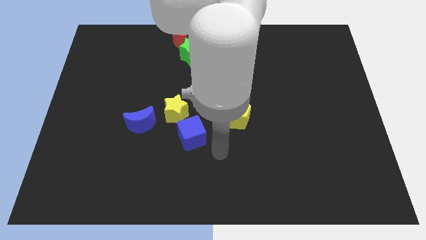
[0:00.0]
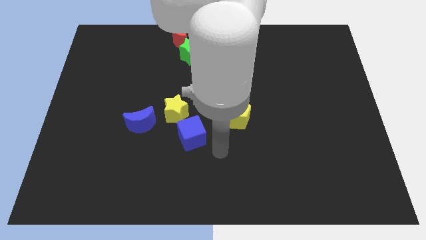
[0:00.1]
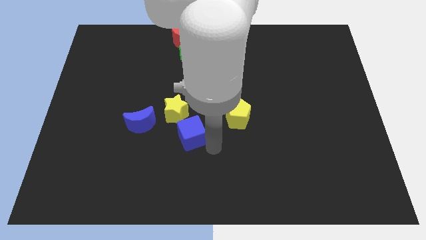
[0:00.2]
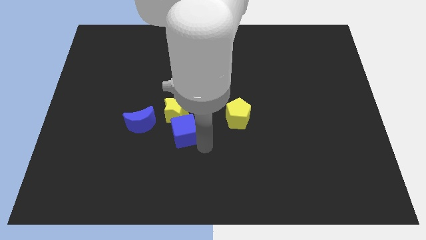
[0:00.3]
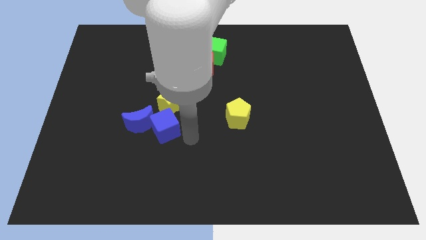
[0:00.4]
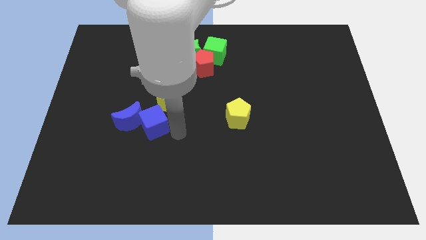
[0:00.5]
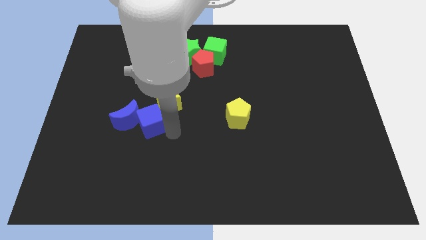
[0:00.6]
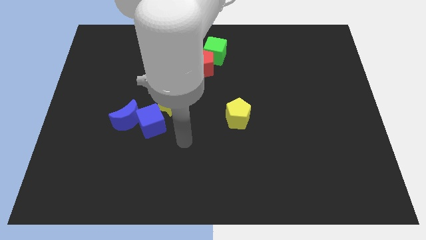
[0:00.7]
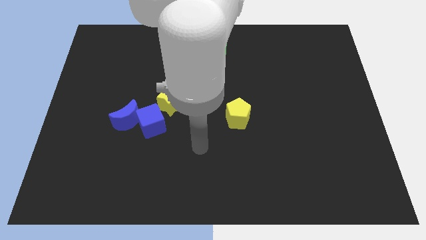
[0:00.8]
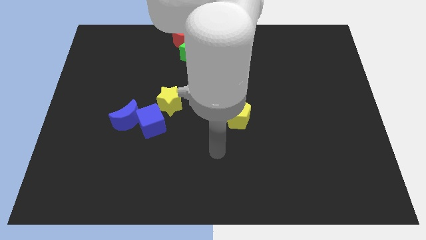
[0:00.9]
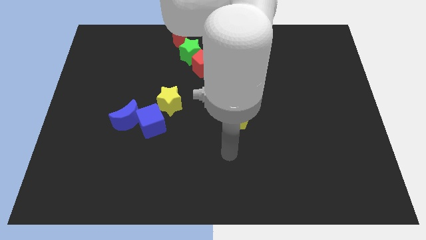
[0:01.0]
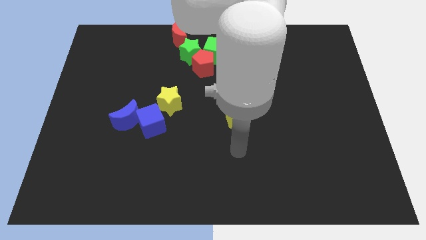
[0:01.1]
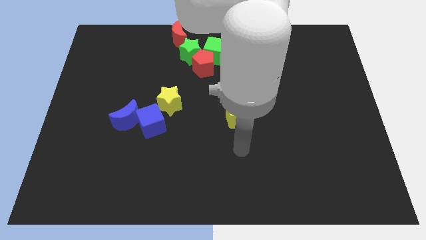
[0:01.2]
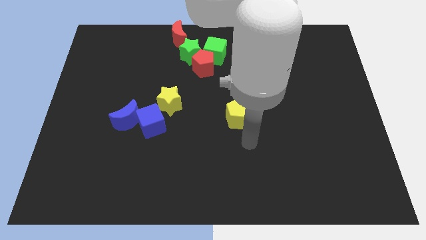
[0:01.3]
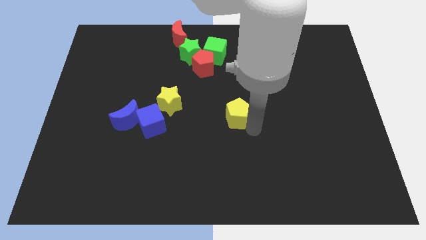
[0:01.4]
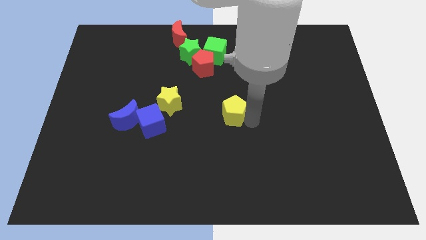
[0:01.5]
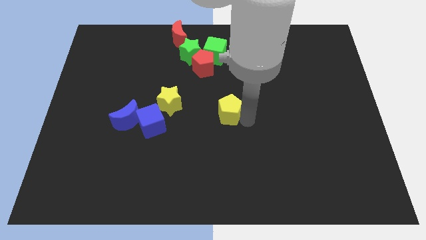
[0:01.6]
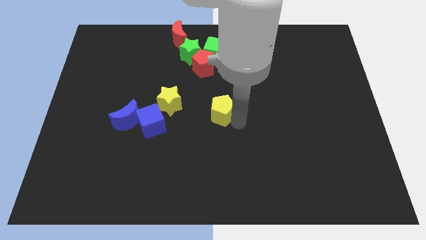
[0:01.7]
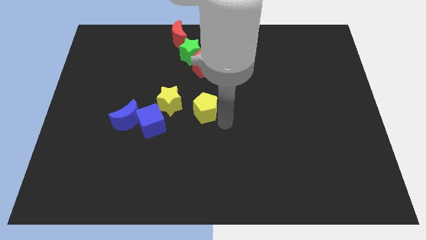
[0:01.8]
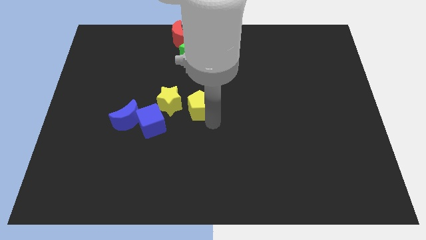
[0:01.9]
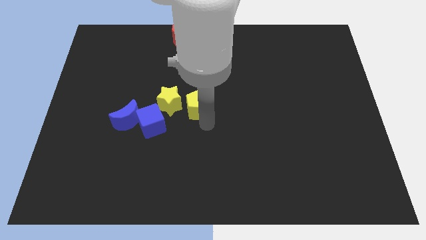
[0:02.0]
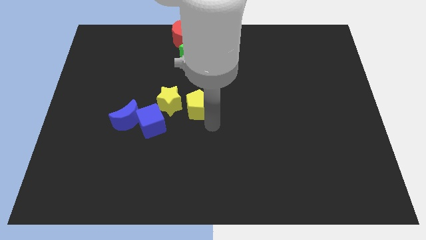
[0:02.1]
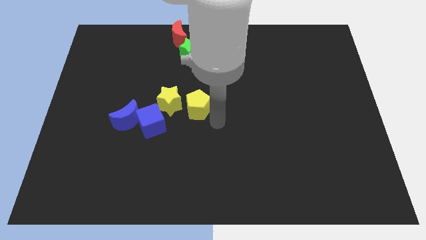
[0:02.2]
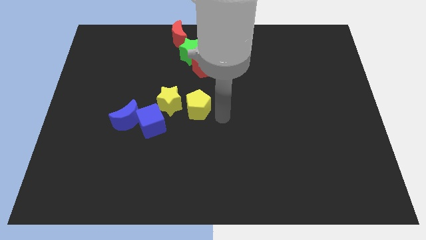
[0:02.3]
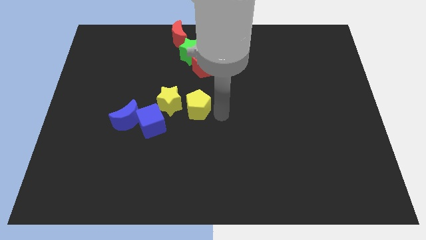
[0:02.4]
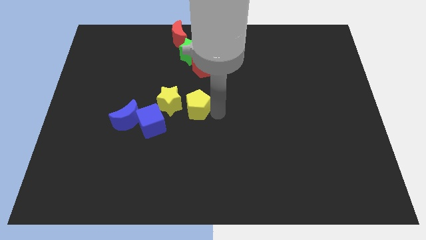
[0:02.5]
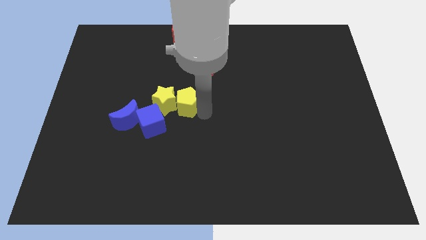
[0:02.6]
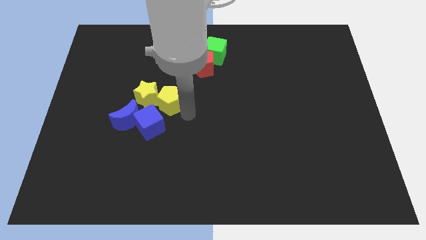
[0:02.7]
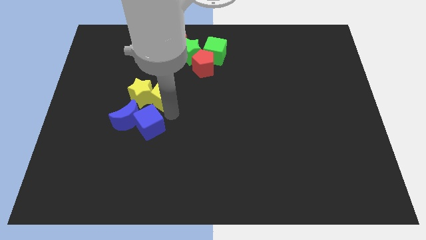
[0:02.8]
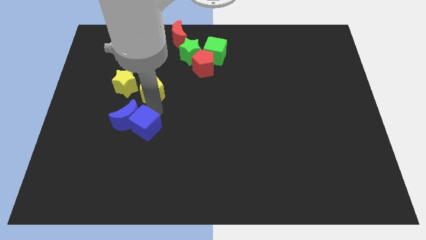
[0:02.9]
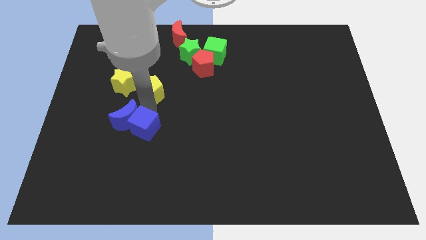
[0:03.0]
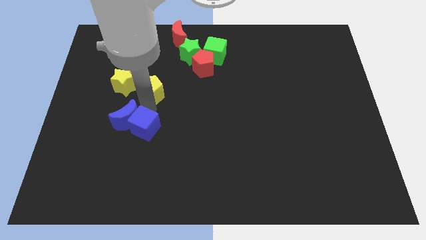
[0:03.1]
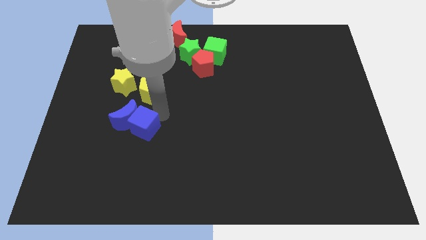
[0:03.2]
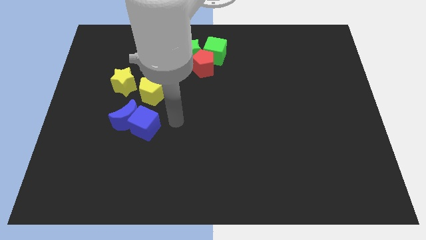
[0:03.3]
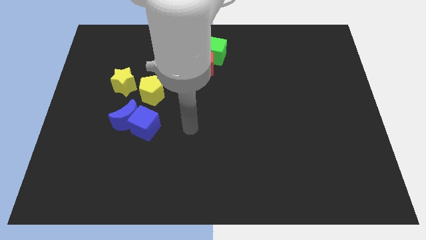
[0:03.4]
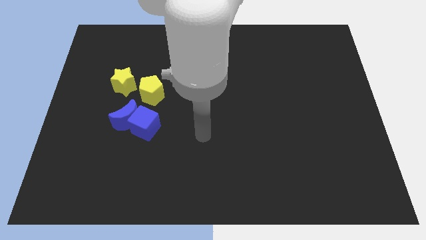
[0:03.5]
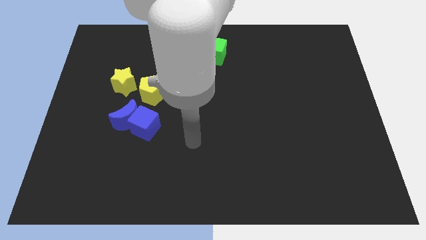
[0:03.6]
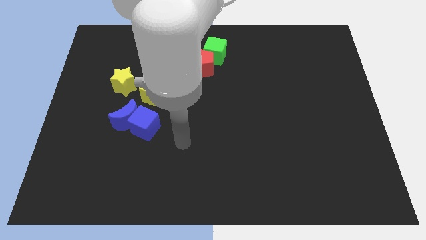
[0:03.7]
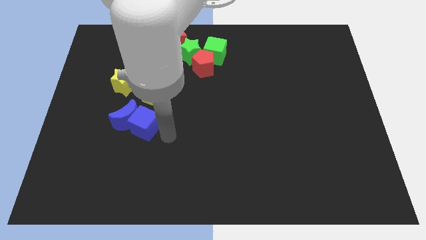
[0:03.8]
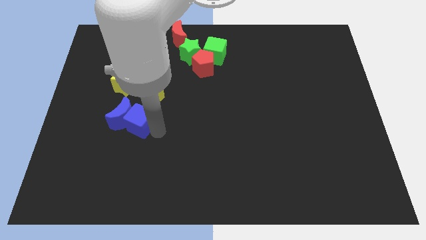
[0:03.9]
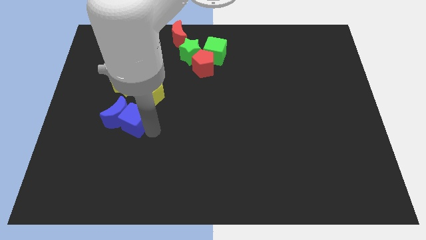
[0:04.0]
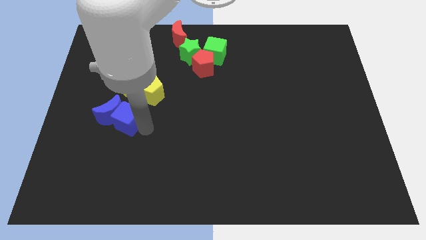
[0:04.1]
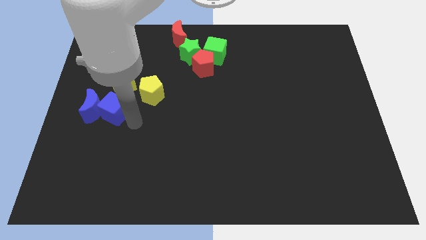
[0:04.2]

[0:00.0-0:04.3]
place the yellow and blue blocks at the left center of the board

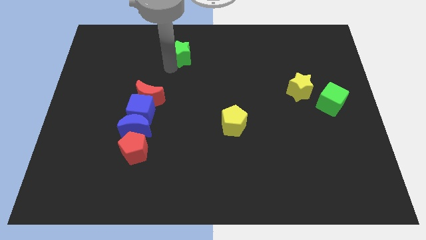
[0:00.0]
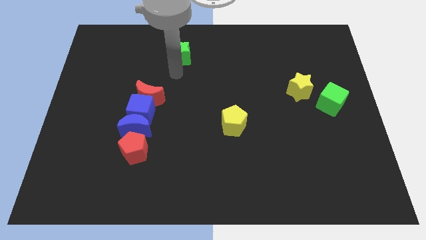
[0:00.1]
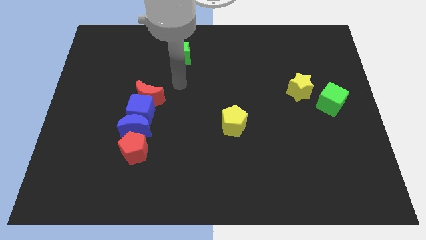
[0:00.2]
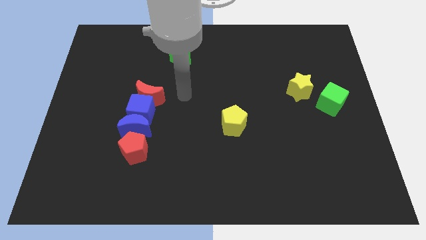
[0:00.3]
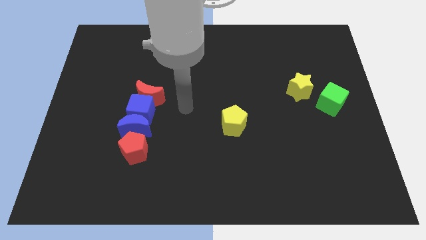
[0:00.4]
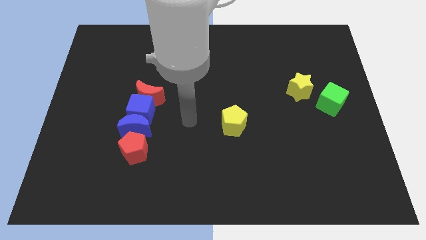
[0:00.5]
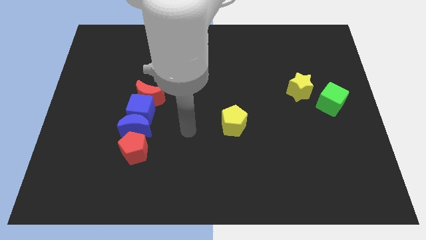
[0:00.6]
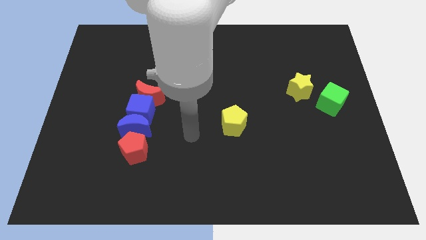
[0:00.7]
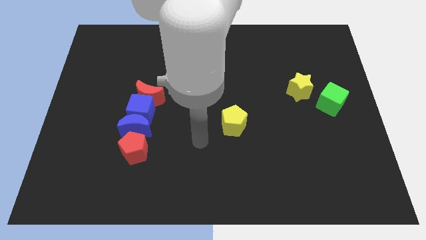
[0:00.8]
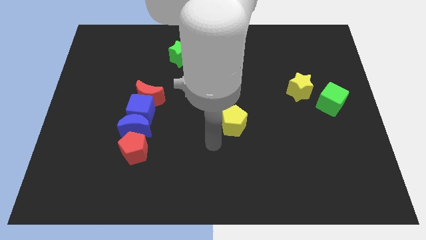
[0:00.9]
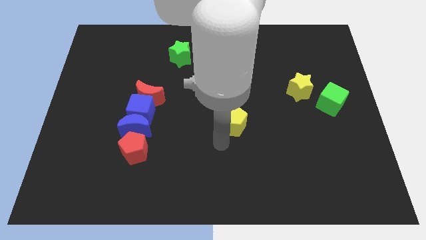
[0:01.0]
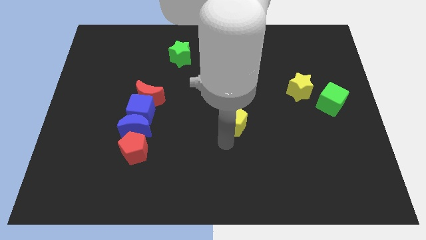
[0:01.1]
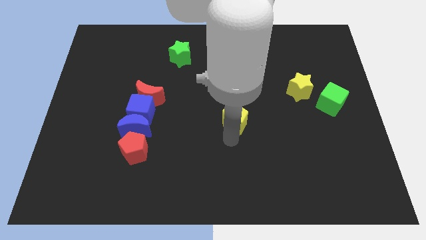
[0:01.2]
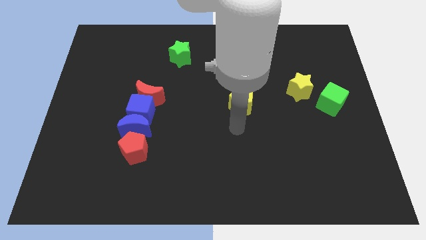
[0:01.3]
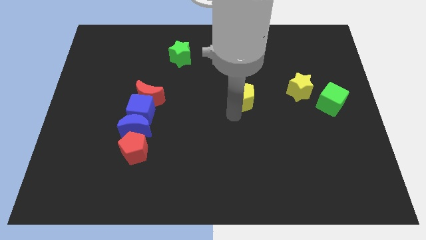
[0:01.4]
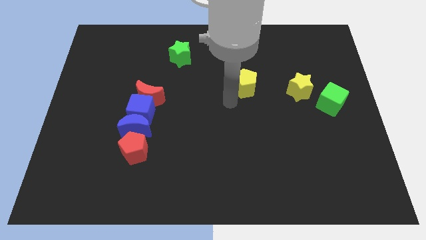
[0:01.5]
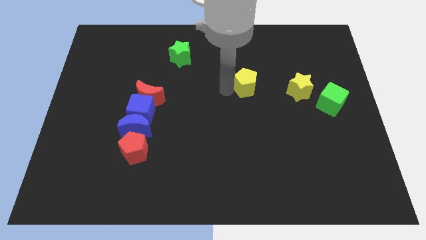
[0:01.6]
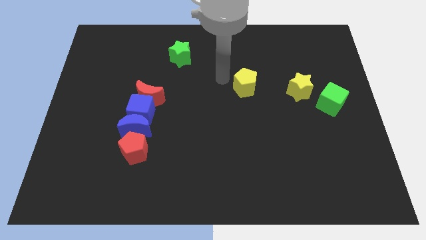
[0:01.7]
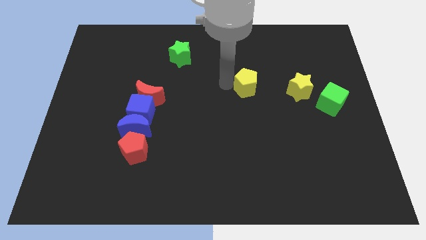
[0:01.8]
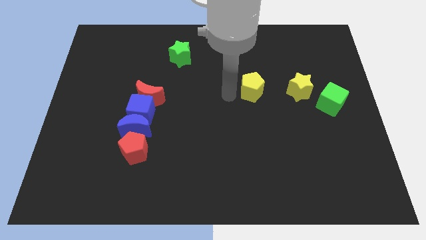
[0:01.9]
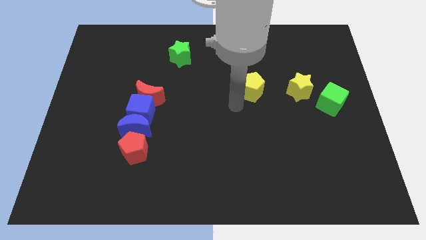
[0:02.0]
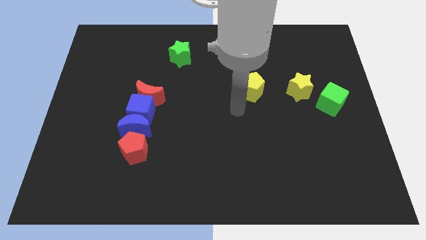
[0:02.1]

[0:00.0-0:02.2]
move the yellow pentagon left to the yellow star

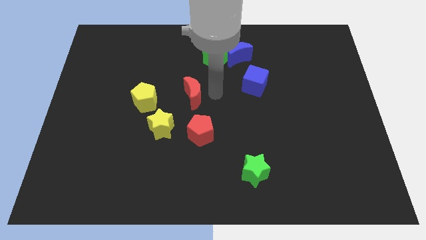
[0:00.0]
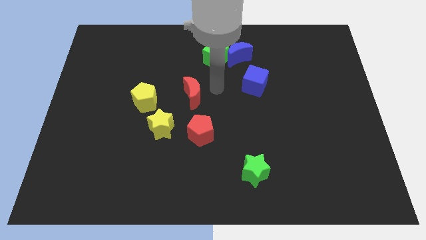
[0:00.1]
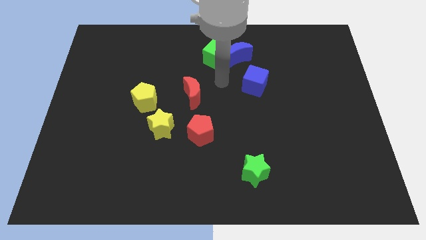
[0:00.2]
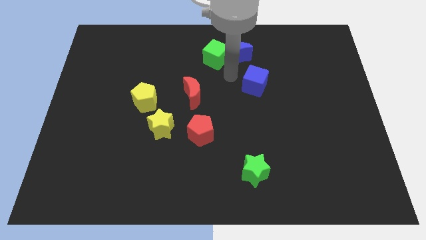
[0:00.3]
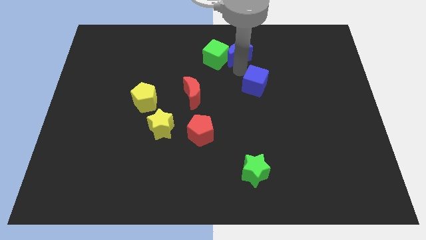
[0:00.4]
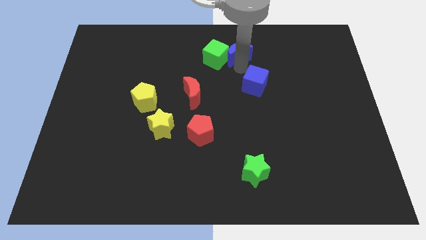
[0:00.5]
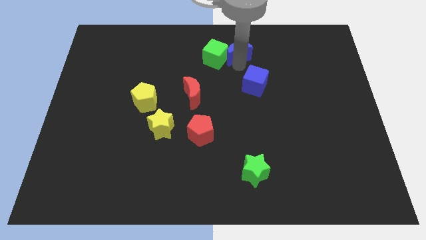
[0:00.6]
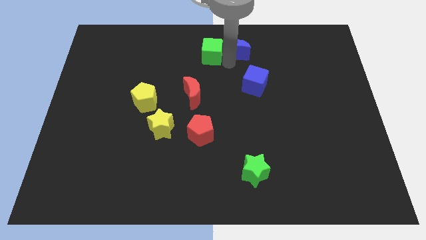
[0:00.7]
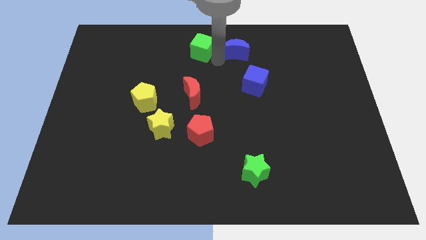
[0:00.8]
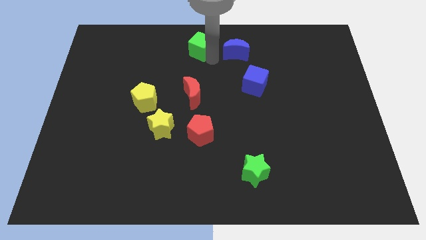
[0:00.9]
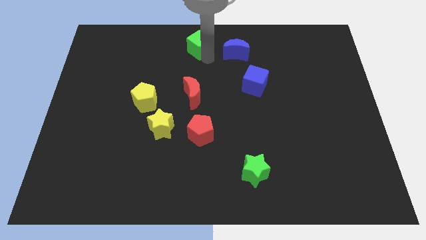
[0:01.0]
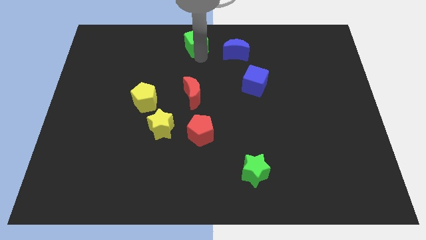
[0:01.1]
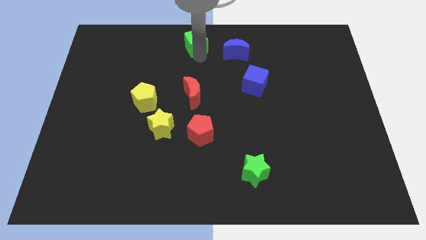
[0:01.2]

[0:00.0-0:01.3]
separate the blue moon and green cube

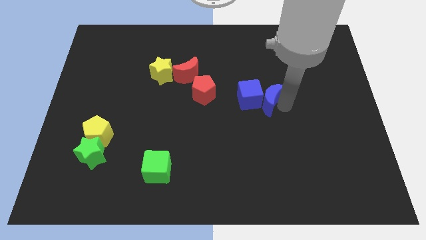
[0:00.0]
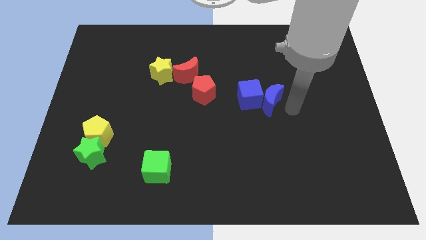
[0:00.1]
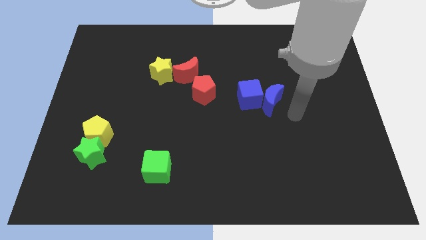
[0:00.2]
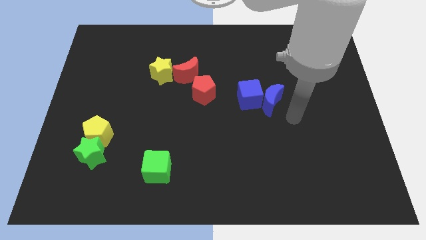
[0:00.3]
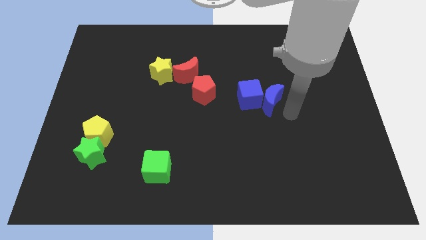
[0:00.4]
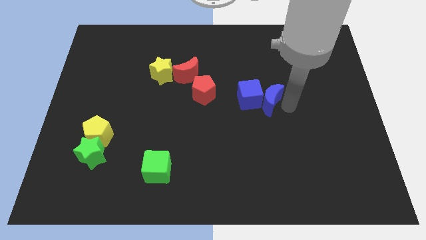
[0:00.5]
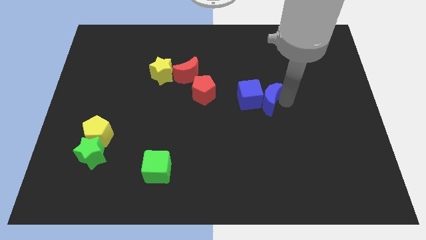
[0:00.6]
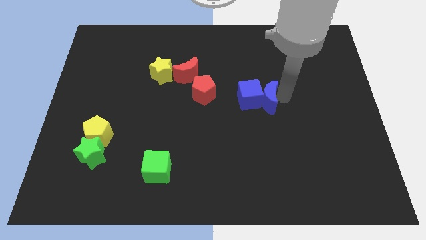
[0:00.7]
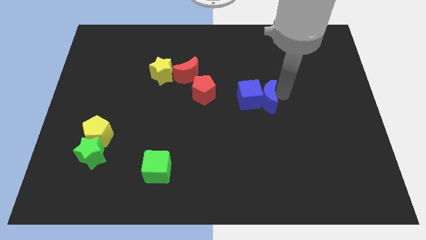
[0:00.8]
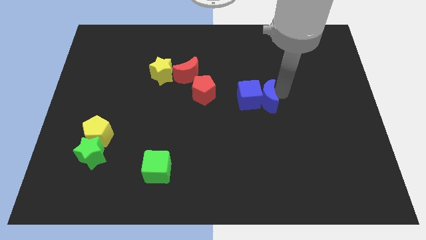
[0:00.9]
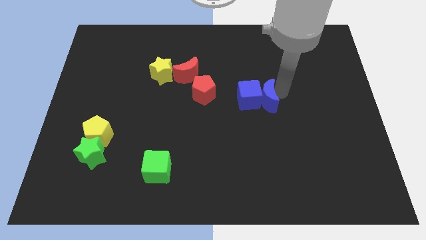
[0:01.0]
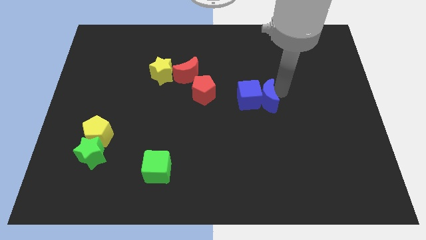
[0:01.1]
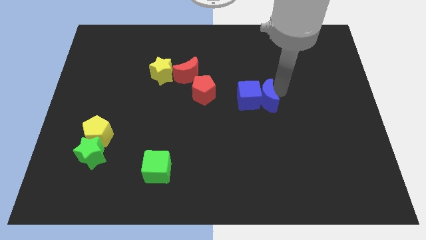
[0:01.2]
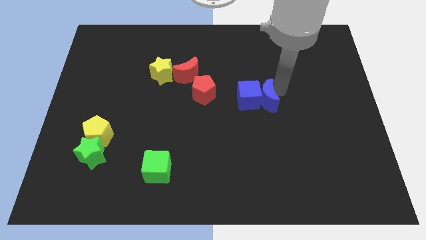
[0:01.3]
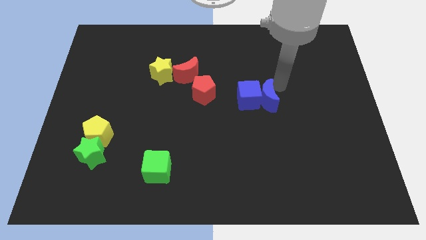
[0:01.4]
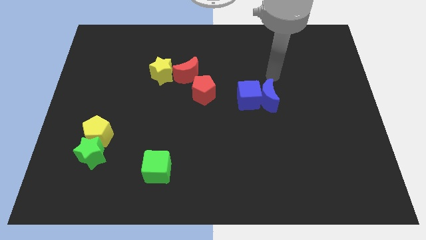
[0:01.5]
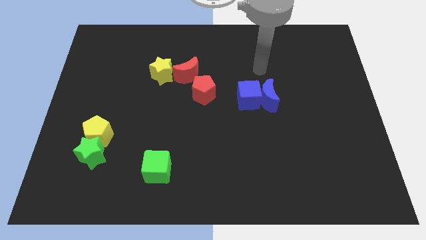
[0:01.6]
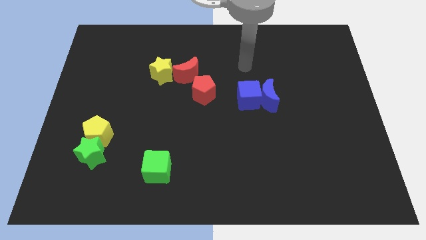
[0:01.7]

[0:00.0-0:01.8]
adjust the blue moon to the right of the blue cube
